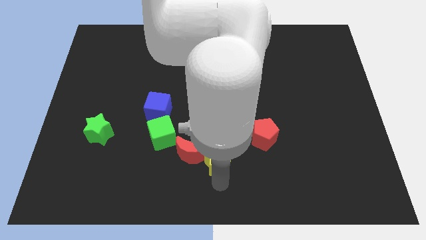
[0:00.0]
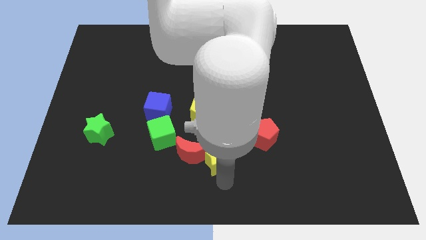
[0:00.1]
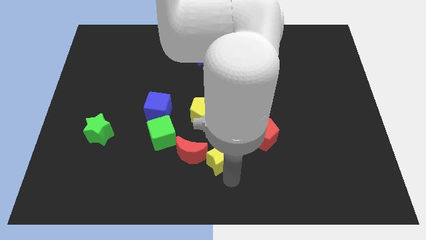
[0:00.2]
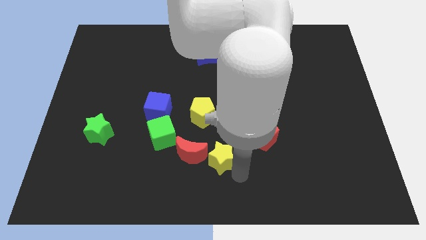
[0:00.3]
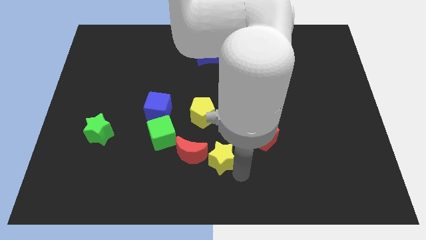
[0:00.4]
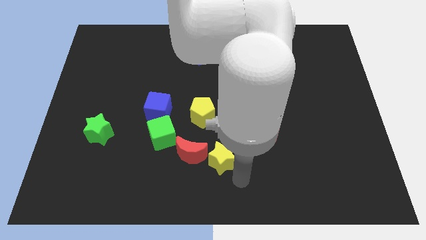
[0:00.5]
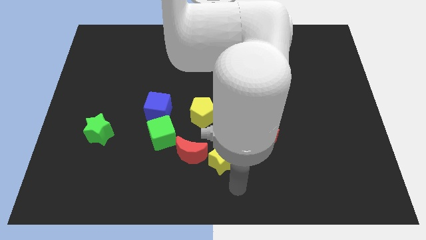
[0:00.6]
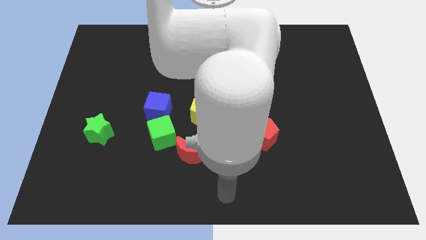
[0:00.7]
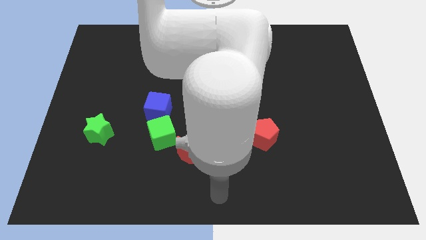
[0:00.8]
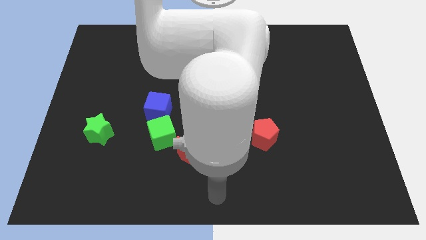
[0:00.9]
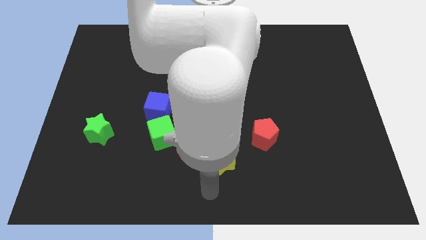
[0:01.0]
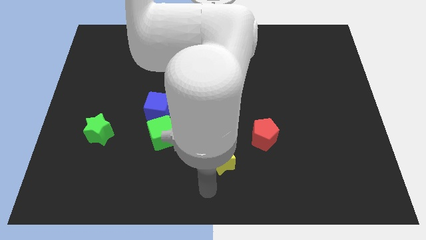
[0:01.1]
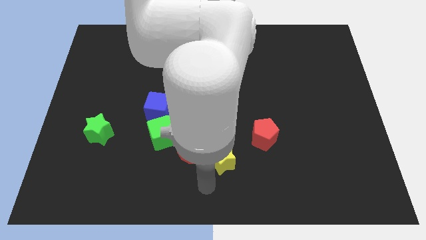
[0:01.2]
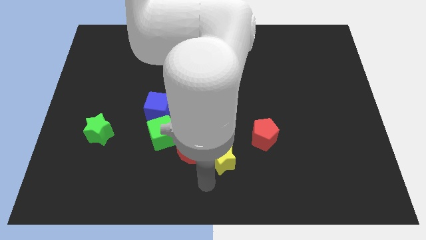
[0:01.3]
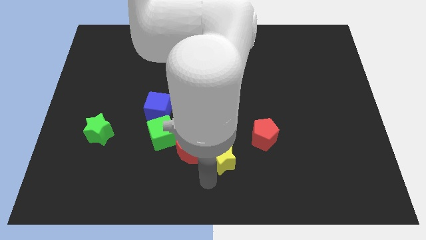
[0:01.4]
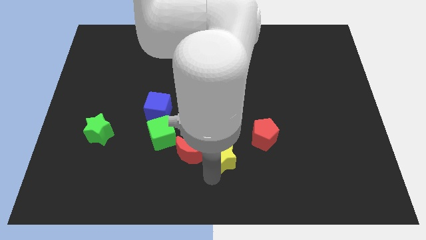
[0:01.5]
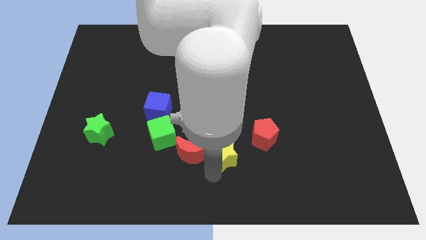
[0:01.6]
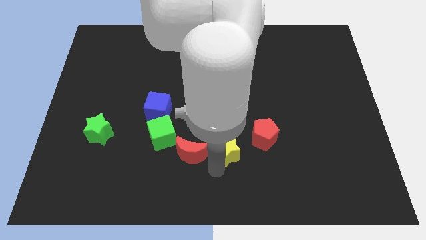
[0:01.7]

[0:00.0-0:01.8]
put the yellow star to the right side of the red crescent

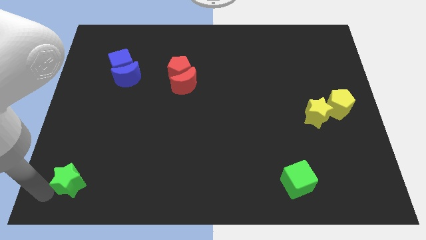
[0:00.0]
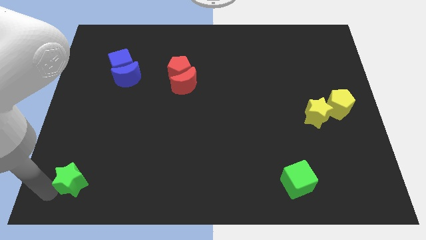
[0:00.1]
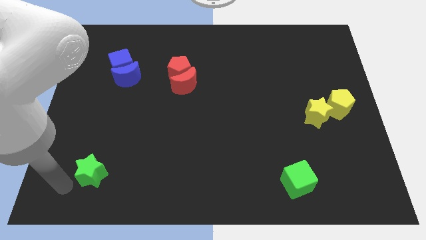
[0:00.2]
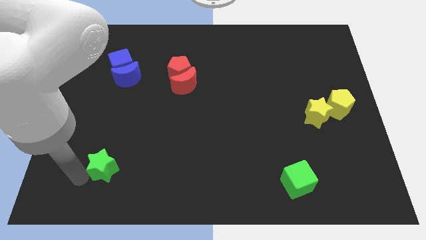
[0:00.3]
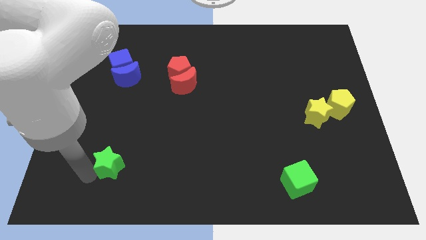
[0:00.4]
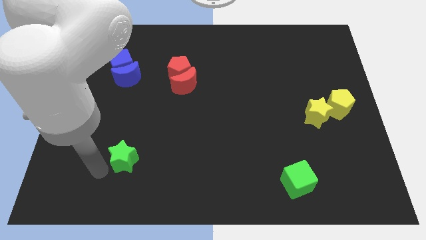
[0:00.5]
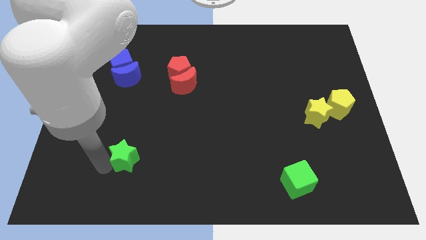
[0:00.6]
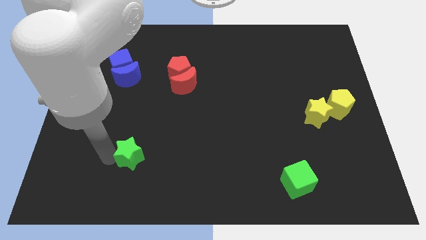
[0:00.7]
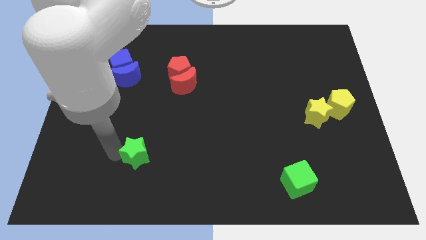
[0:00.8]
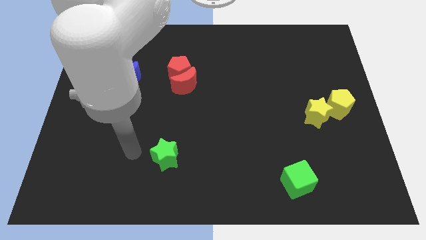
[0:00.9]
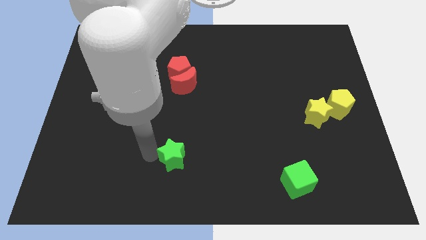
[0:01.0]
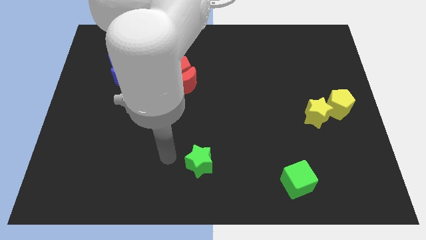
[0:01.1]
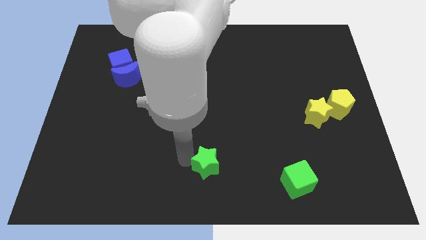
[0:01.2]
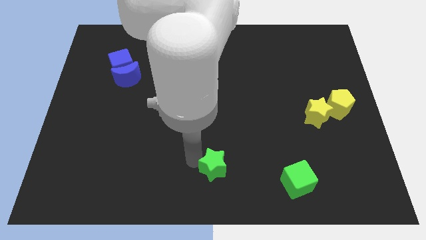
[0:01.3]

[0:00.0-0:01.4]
move the green star to the bottom center of the board

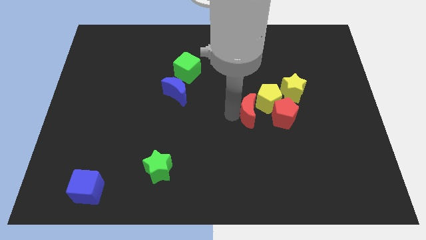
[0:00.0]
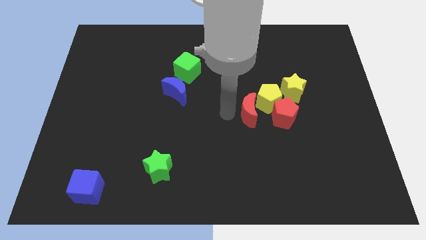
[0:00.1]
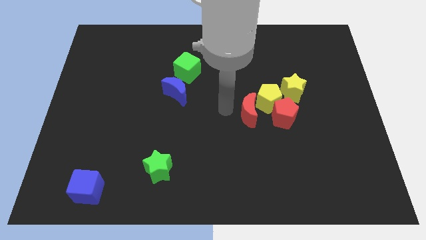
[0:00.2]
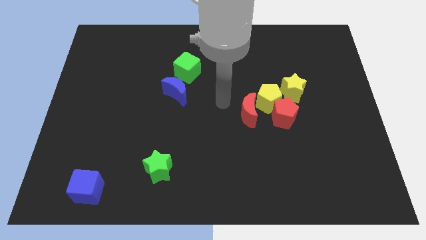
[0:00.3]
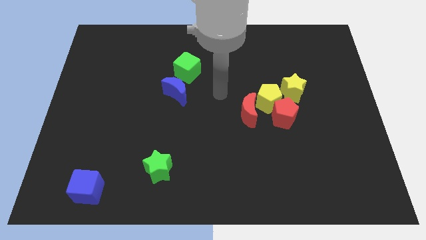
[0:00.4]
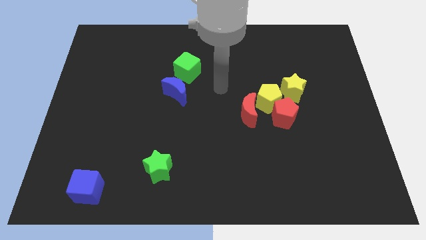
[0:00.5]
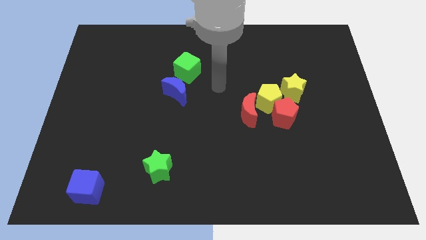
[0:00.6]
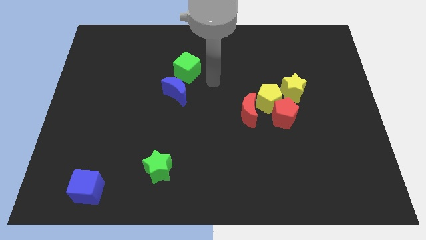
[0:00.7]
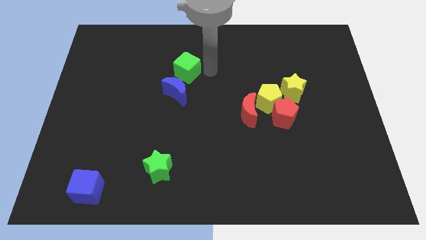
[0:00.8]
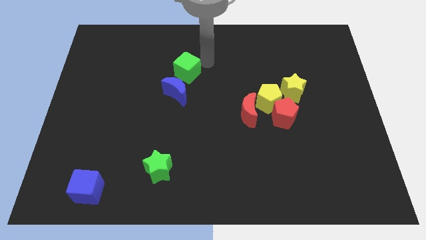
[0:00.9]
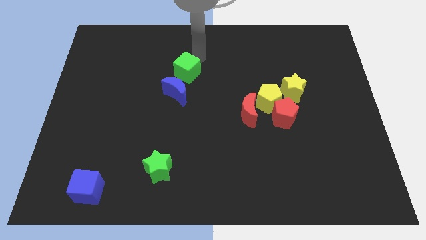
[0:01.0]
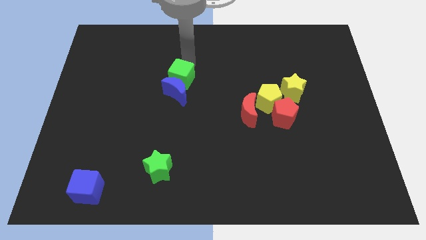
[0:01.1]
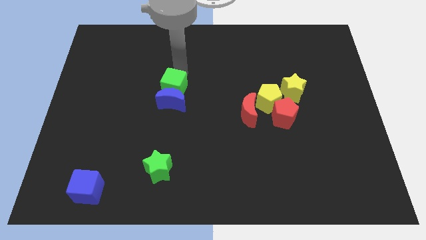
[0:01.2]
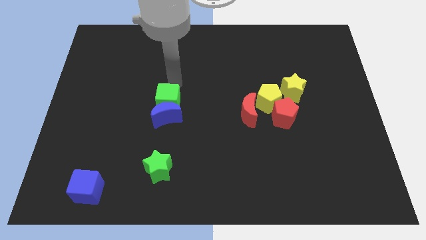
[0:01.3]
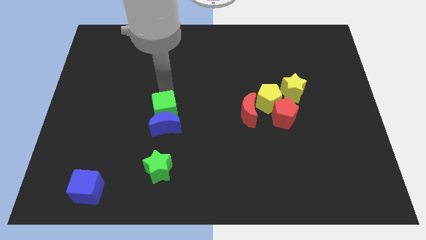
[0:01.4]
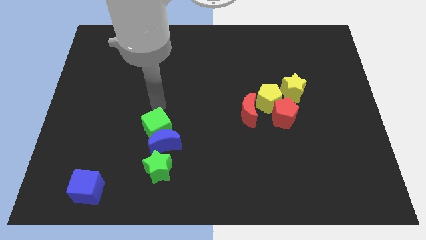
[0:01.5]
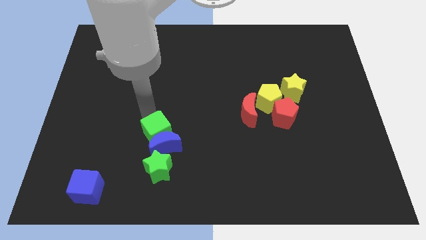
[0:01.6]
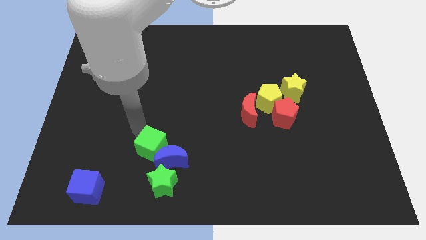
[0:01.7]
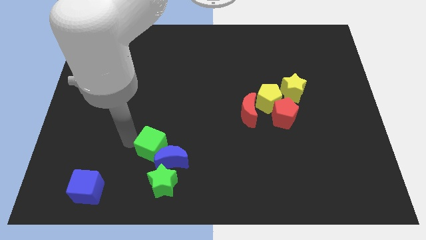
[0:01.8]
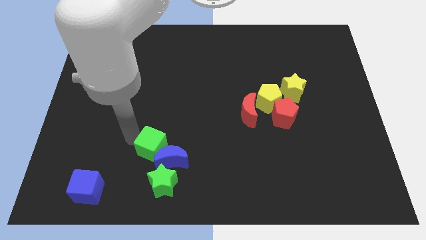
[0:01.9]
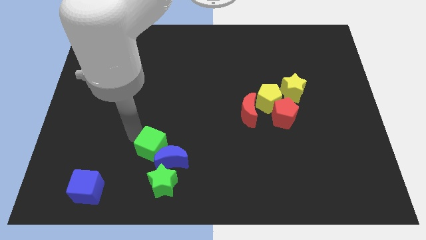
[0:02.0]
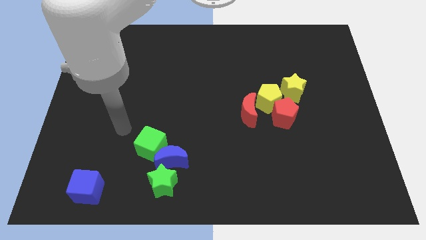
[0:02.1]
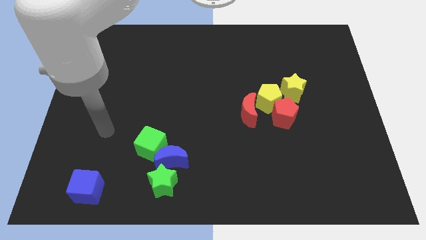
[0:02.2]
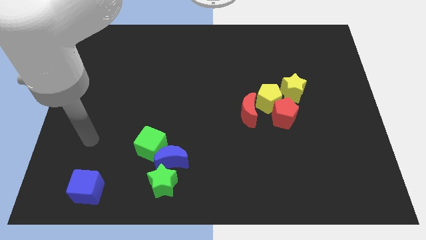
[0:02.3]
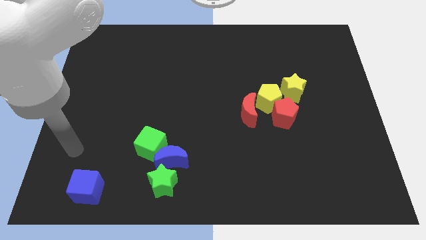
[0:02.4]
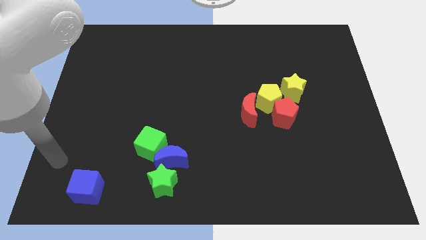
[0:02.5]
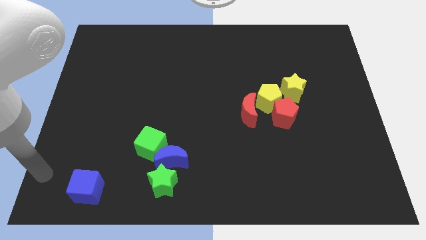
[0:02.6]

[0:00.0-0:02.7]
move the green blocks and blue crescent towards the bottom of the board

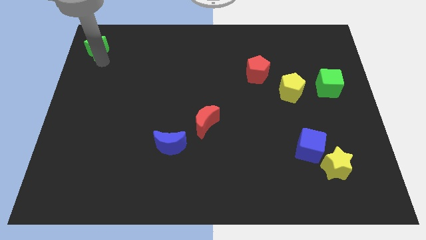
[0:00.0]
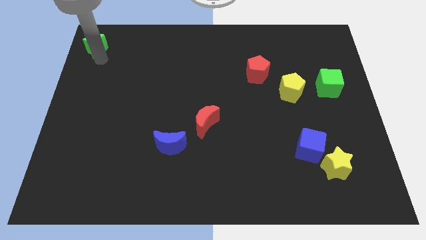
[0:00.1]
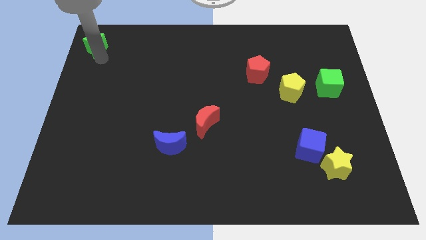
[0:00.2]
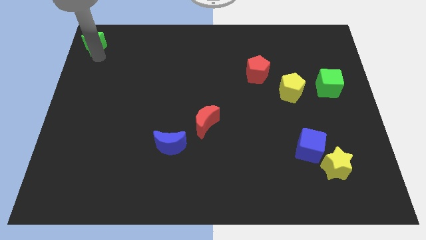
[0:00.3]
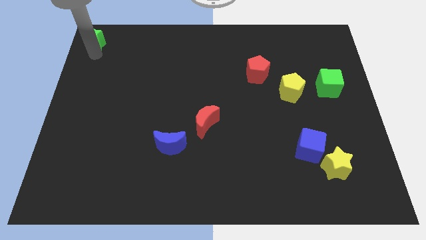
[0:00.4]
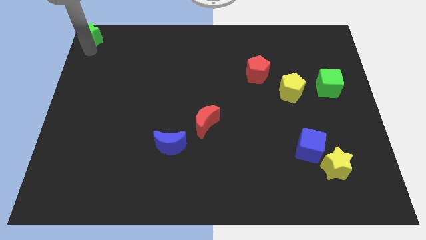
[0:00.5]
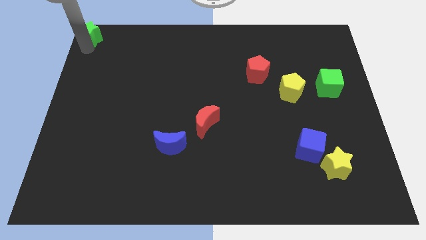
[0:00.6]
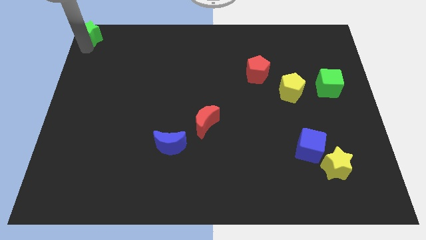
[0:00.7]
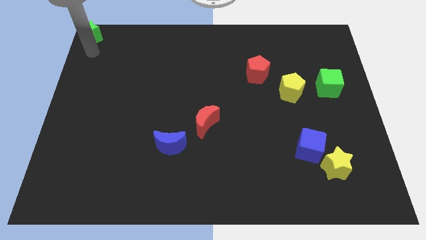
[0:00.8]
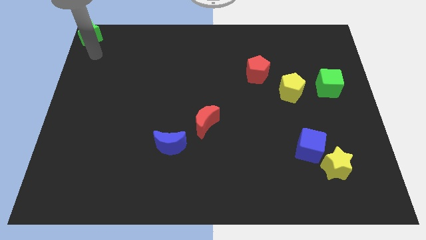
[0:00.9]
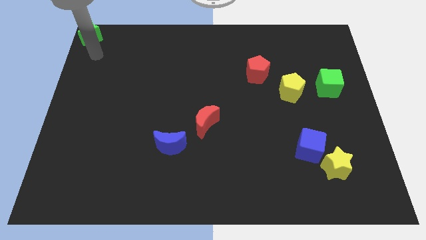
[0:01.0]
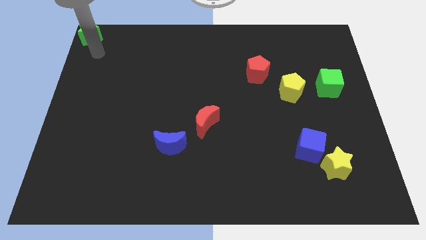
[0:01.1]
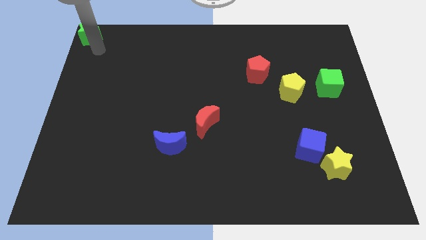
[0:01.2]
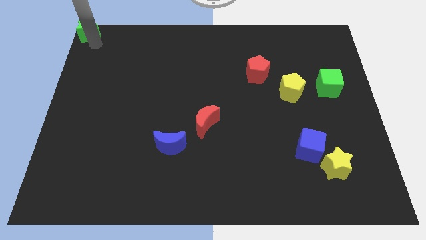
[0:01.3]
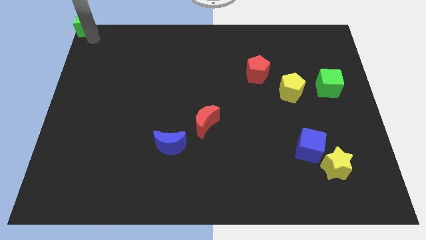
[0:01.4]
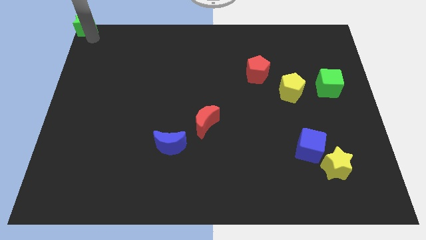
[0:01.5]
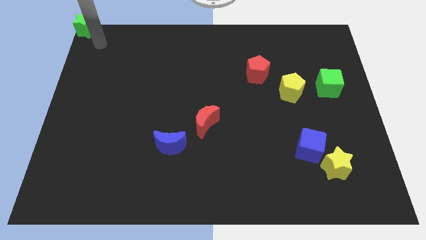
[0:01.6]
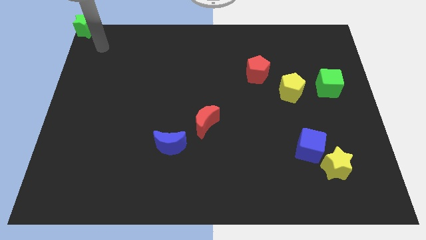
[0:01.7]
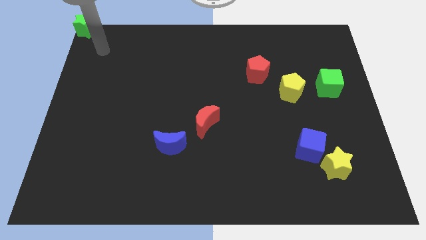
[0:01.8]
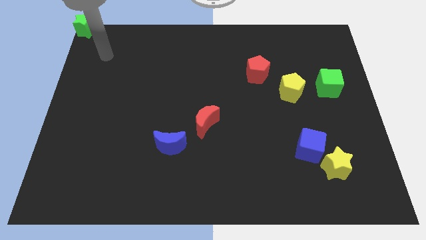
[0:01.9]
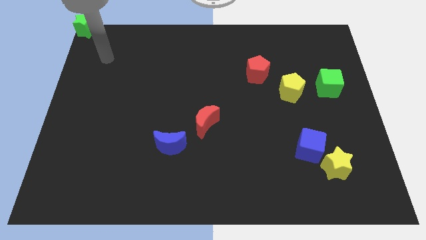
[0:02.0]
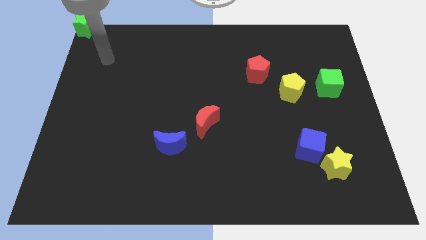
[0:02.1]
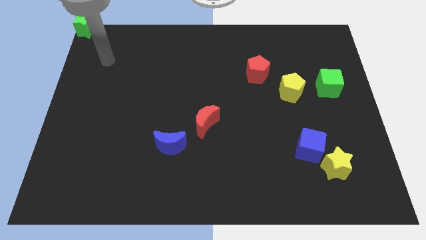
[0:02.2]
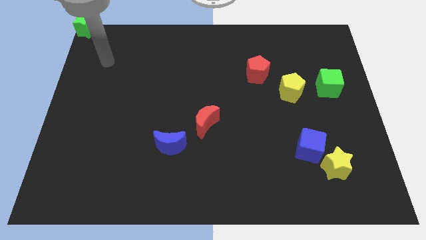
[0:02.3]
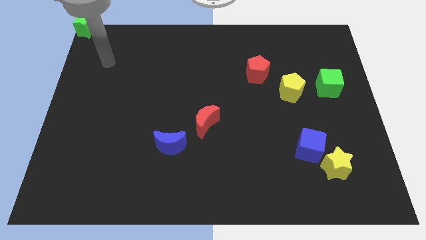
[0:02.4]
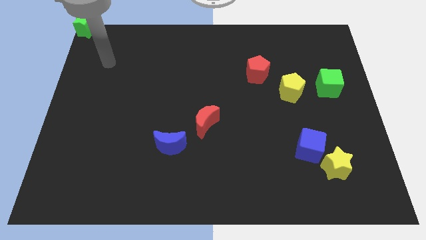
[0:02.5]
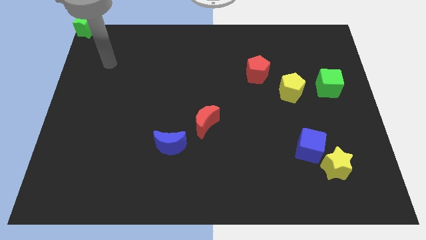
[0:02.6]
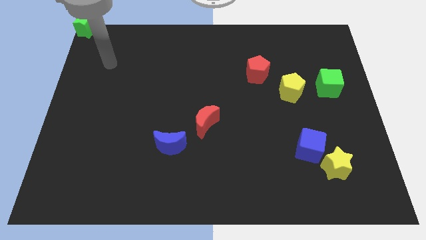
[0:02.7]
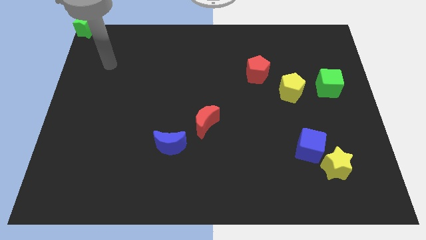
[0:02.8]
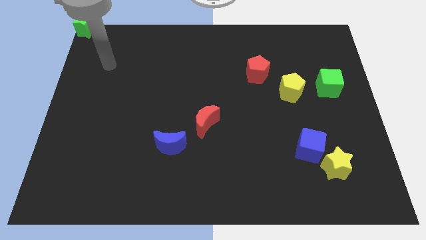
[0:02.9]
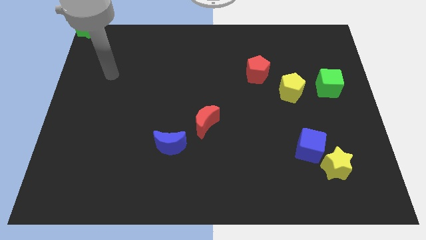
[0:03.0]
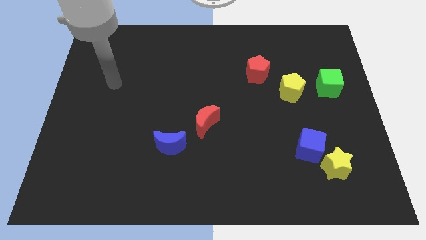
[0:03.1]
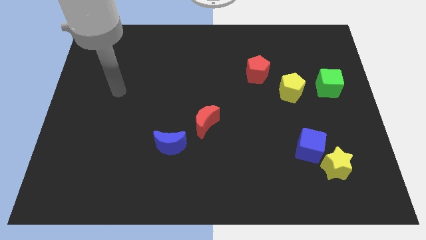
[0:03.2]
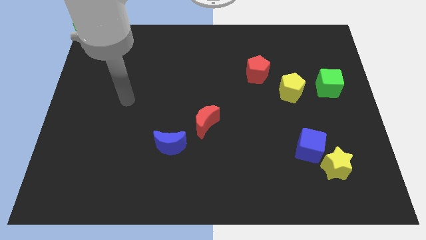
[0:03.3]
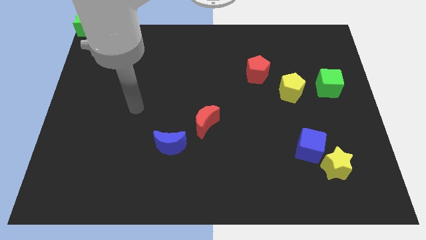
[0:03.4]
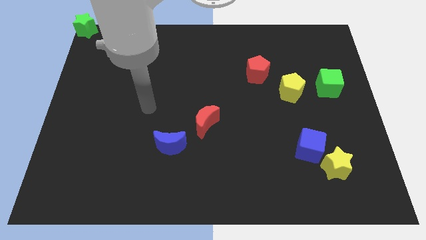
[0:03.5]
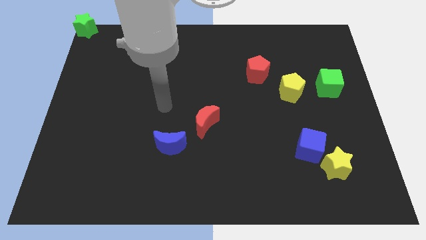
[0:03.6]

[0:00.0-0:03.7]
move the green star into the top left corner
